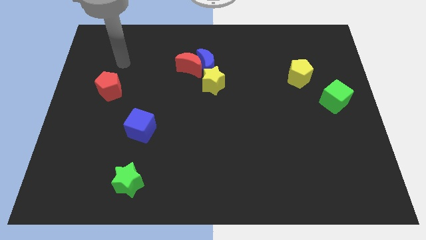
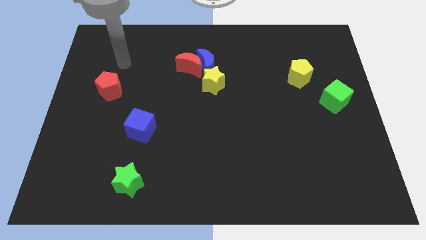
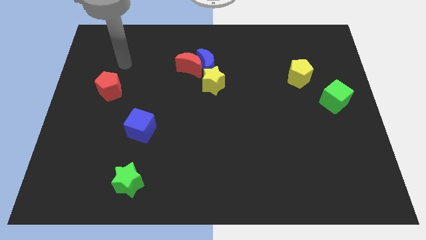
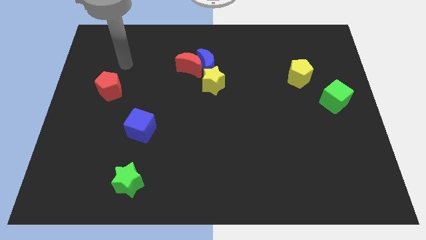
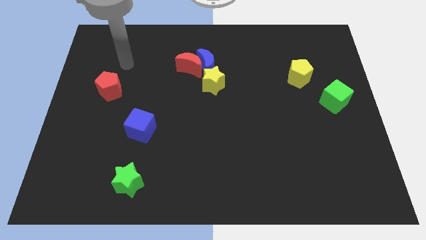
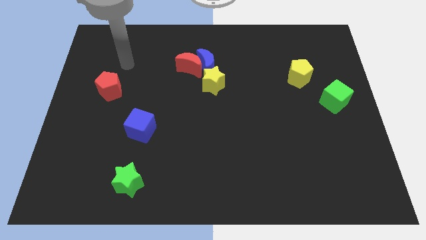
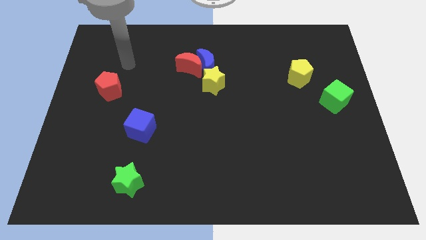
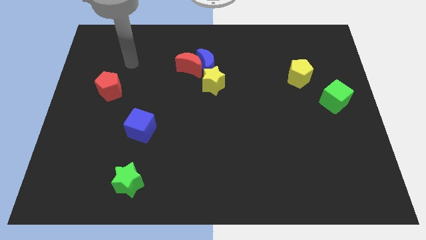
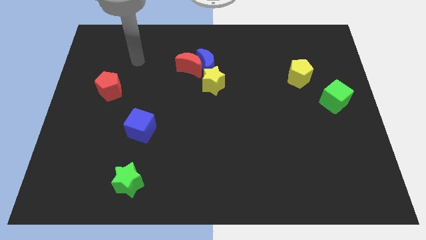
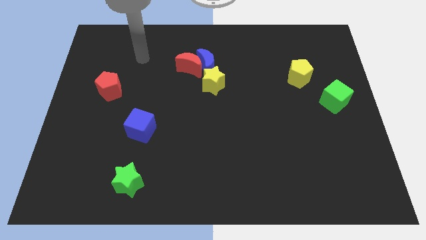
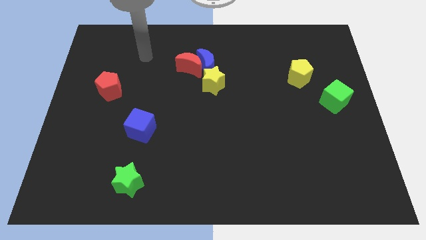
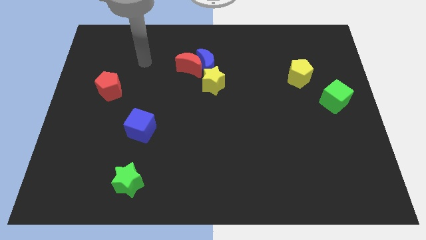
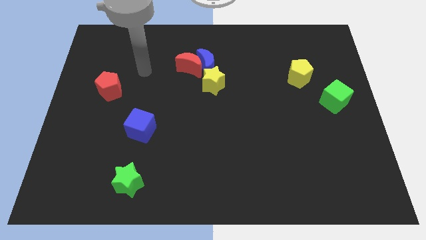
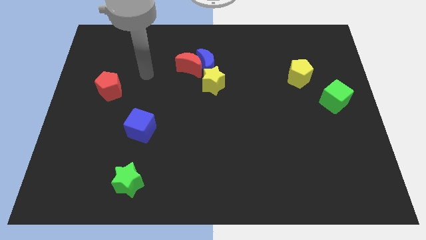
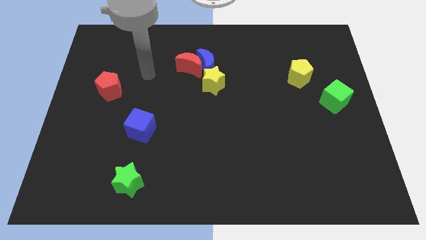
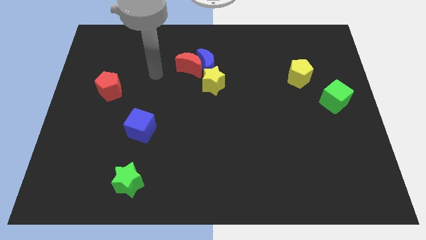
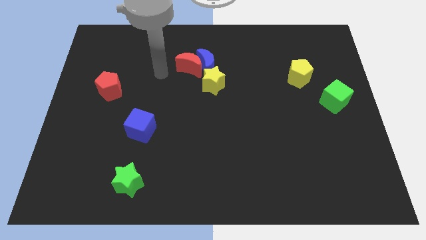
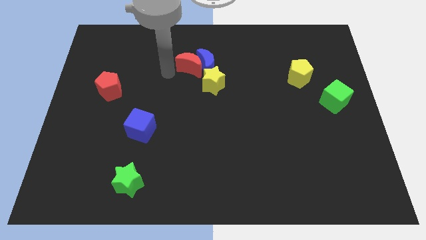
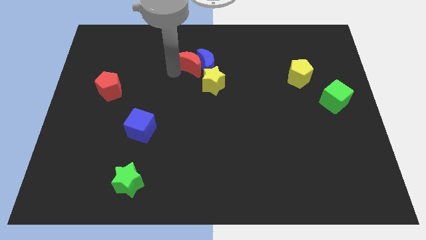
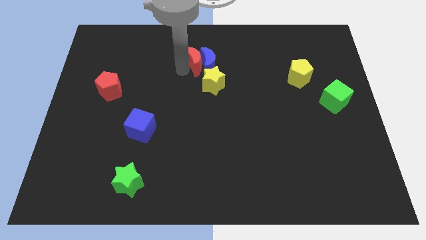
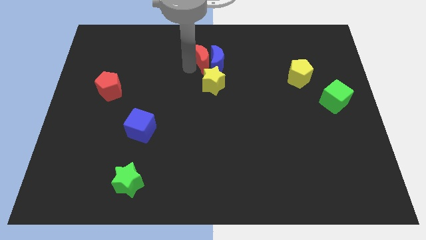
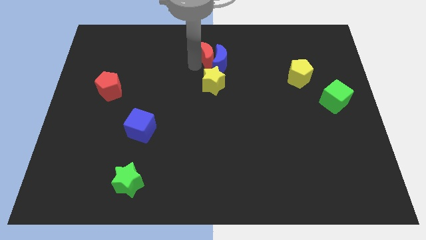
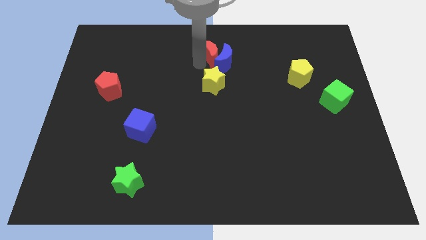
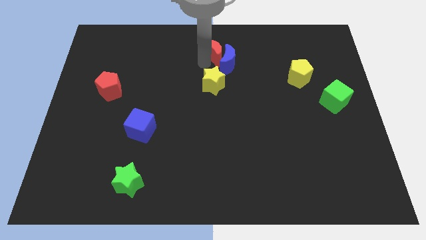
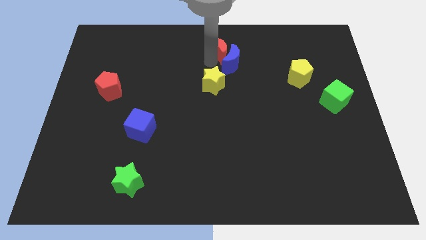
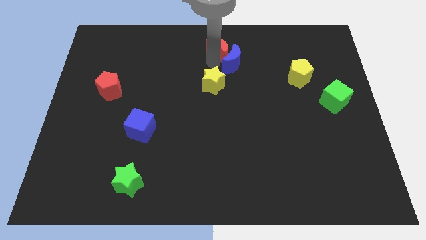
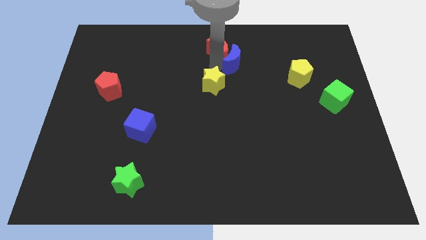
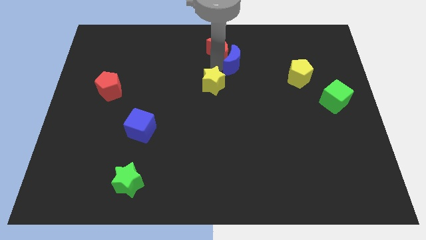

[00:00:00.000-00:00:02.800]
push the red crescent along with the blue crescent to the top

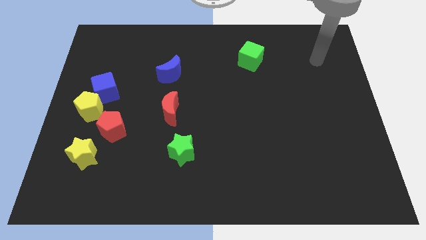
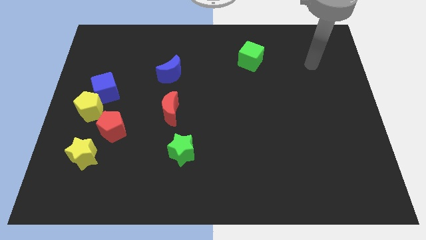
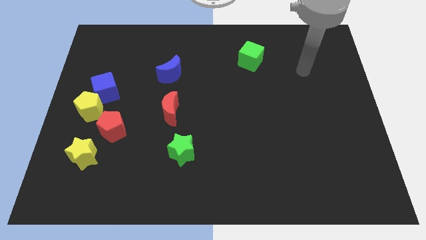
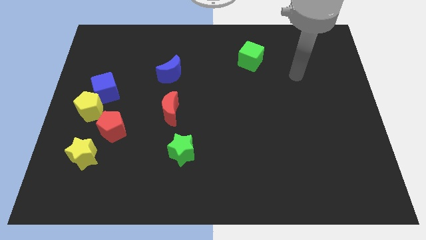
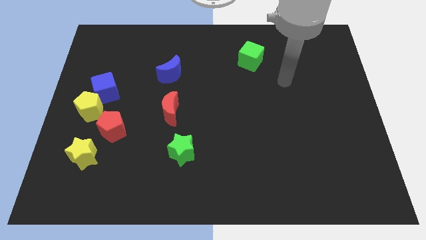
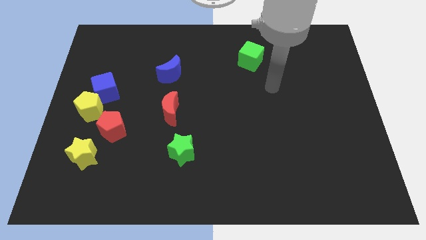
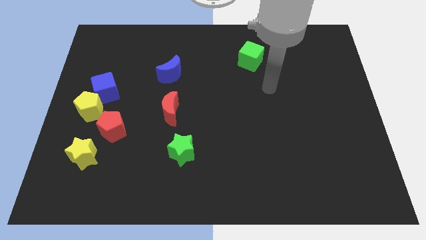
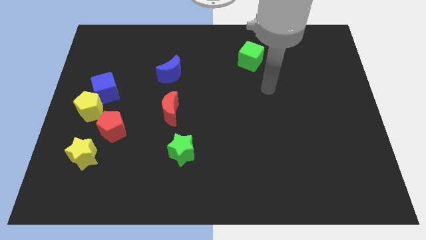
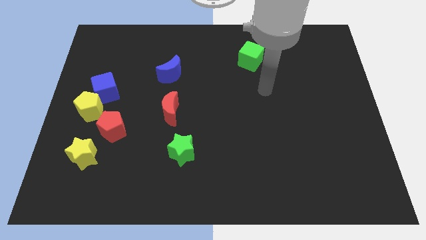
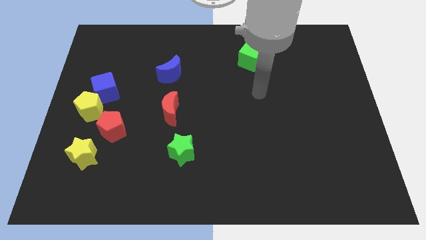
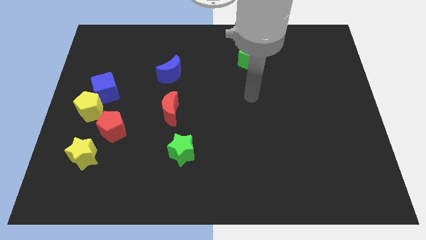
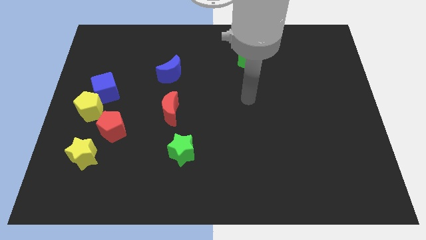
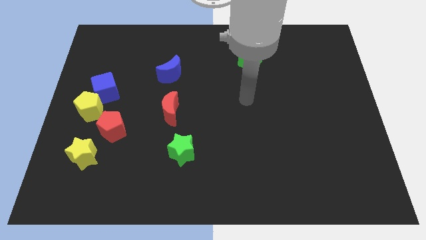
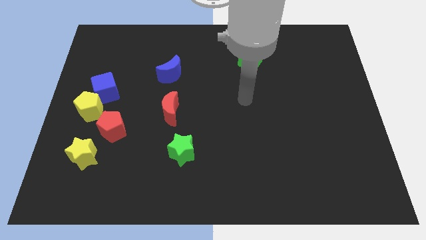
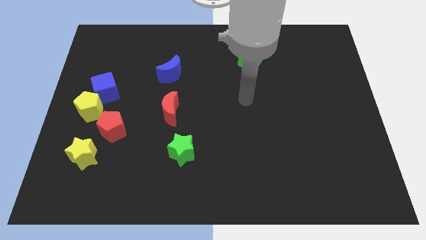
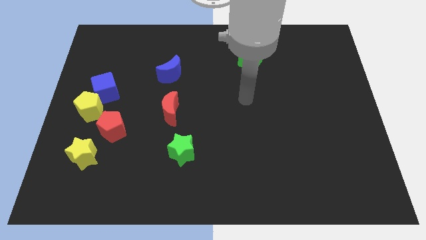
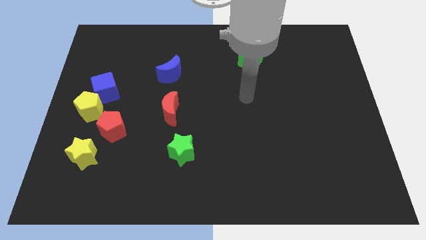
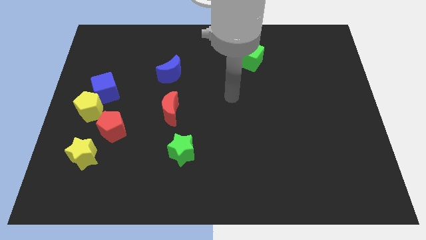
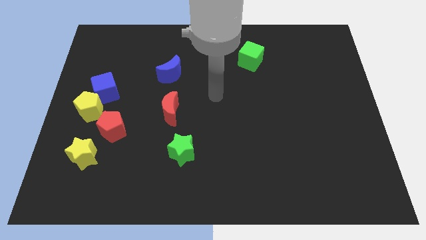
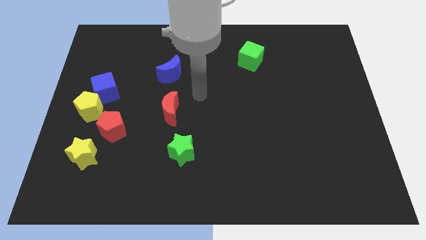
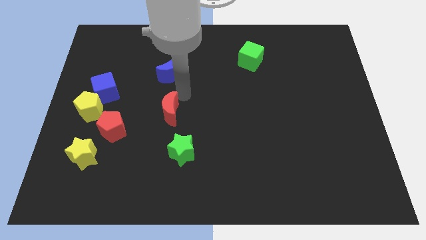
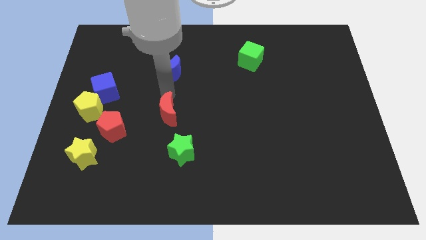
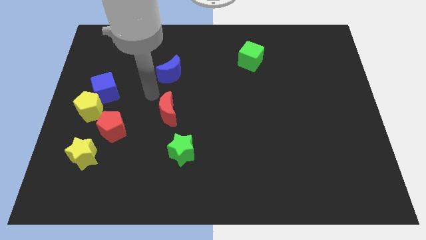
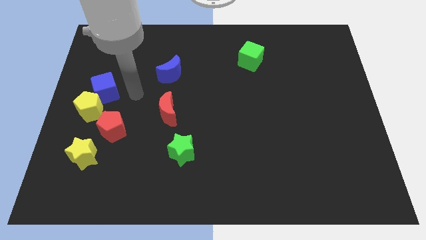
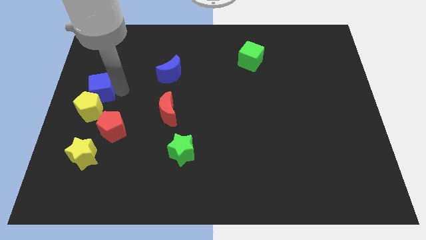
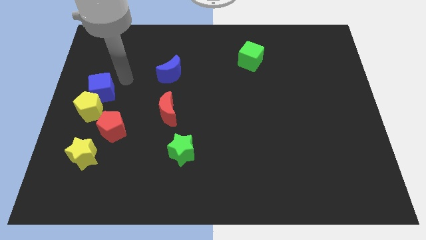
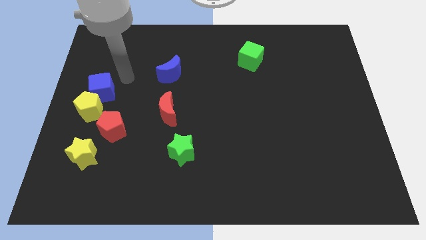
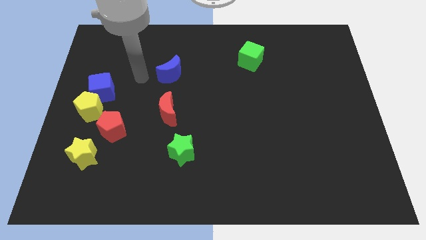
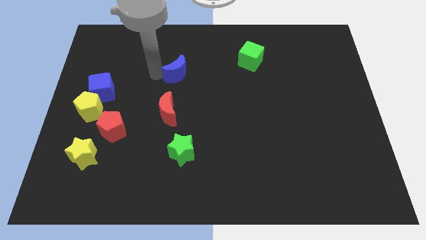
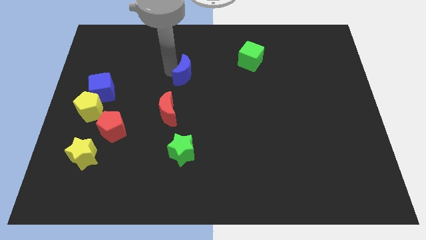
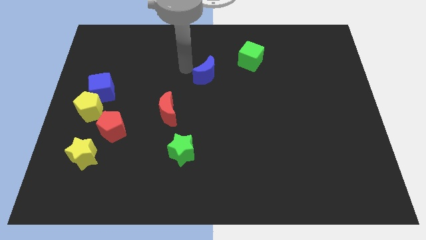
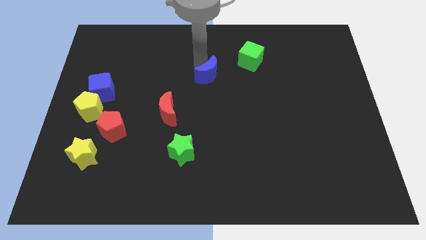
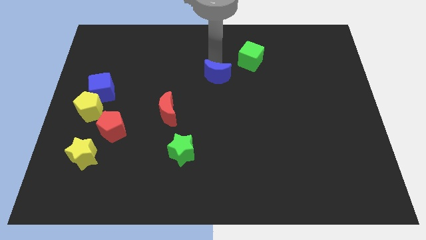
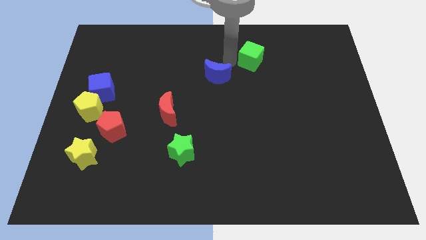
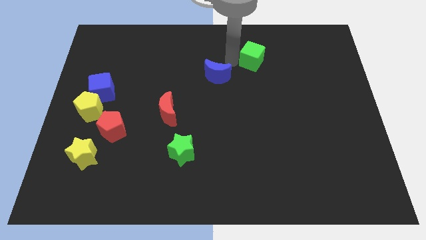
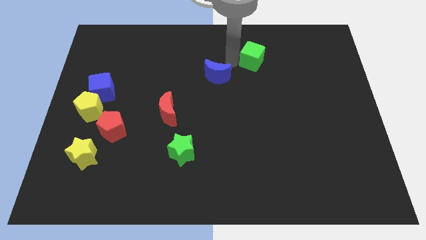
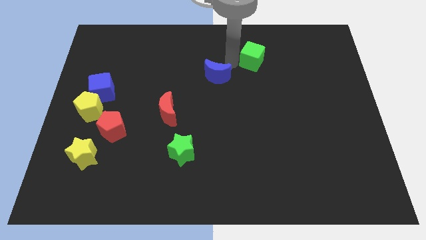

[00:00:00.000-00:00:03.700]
place the blue moon on bottom left to green cube

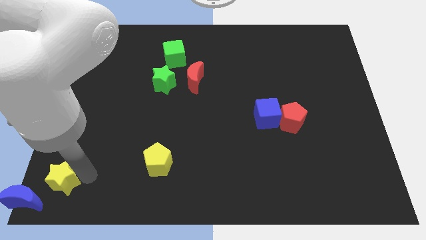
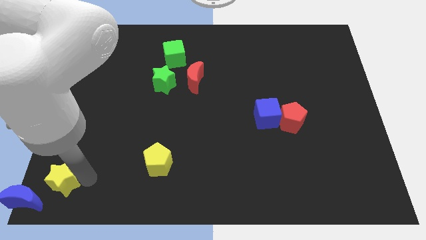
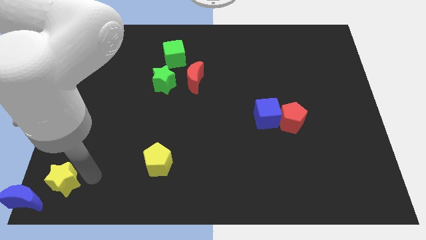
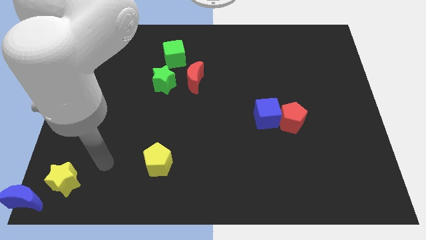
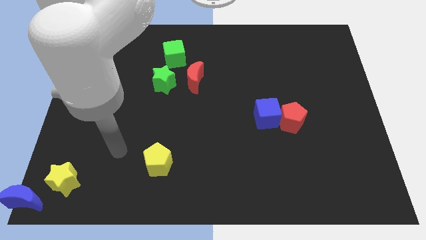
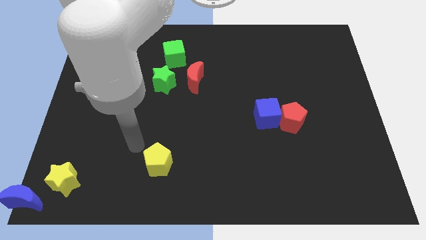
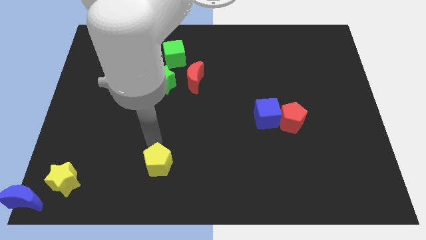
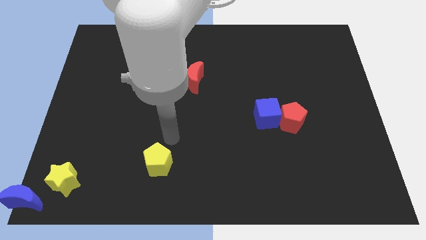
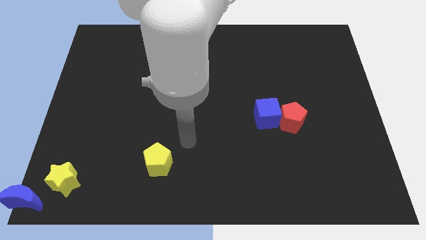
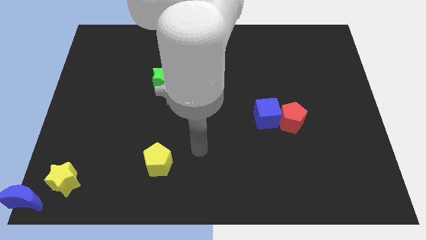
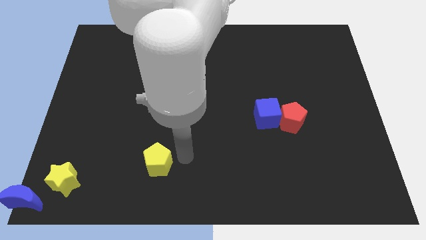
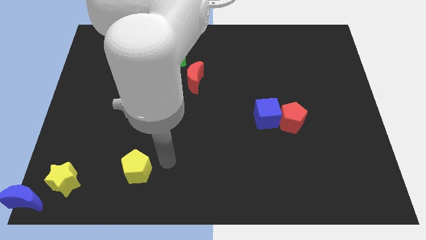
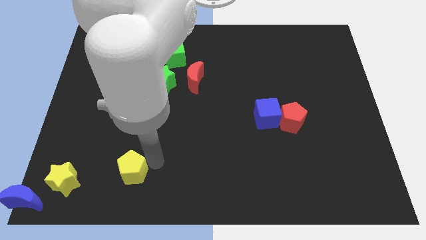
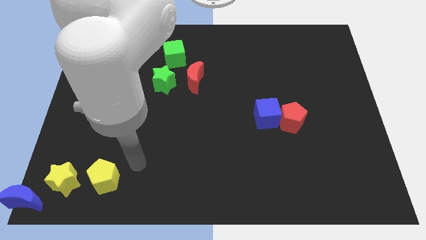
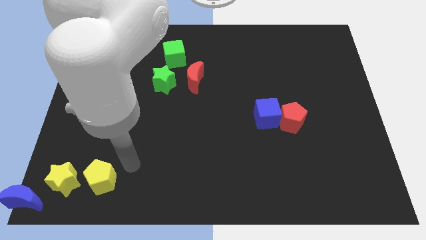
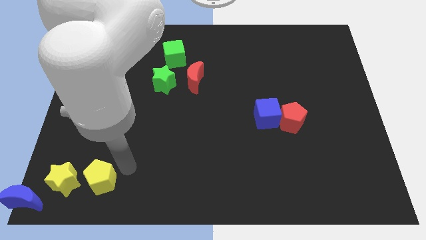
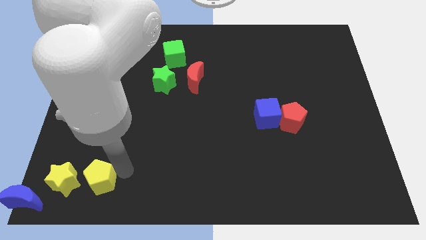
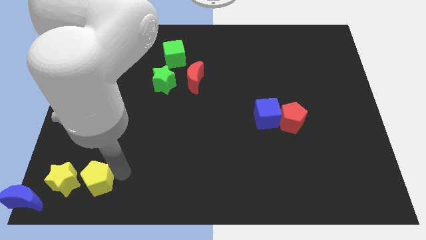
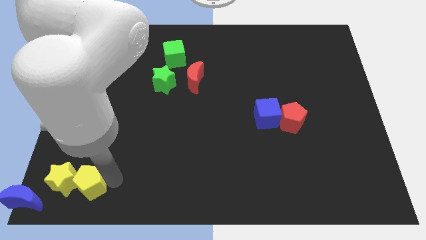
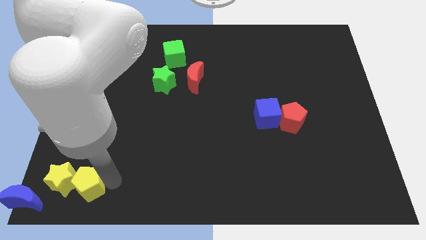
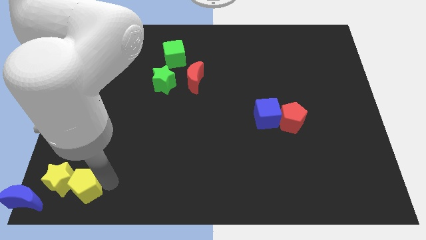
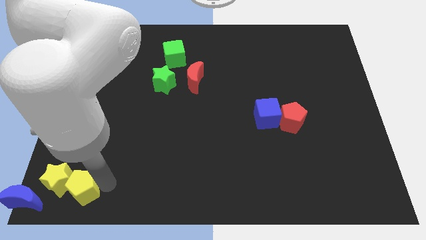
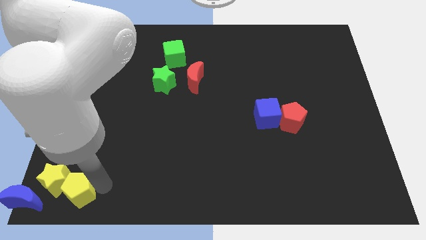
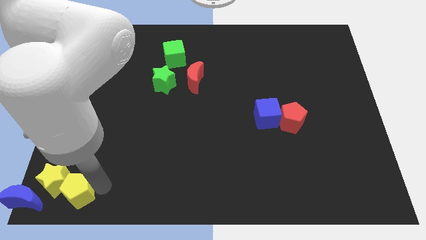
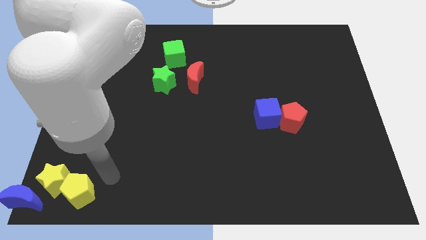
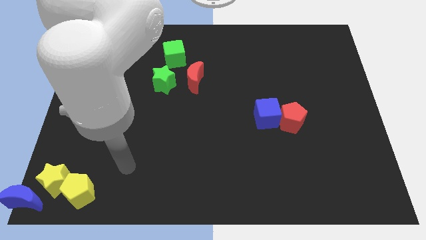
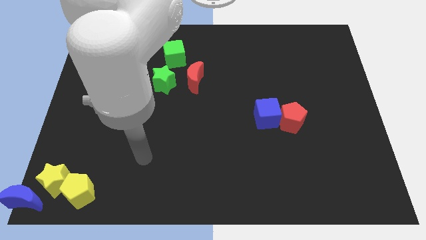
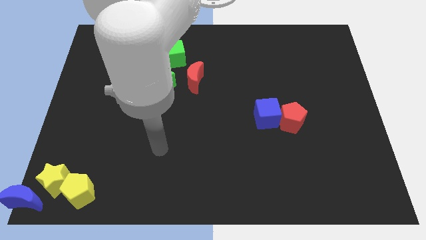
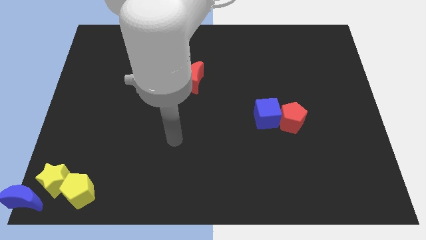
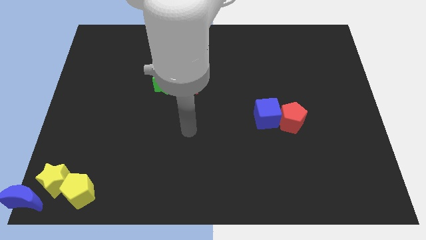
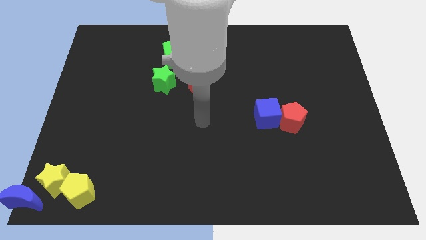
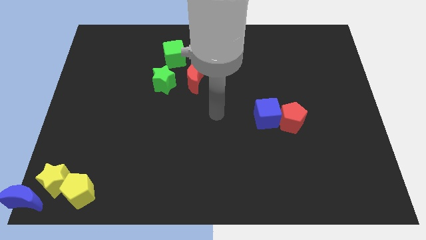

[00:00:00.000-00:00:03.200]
push the yellow pentagon into the yellow star
